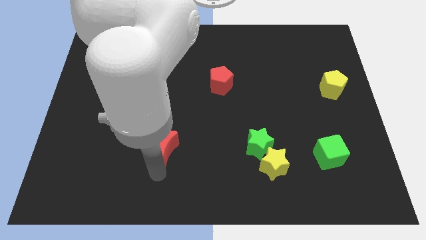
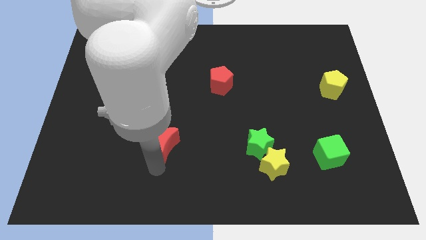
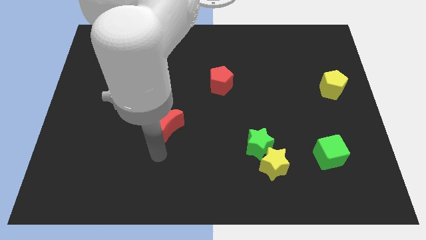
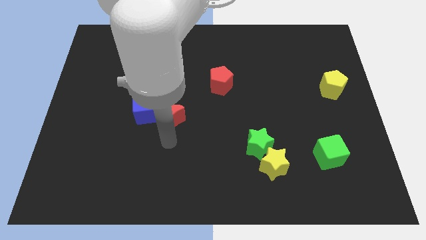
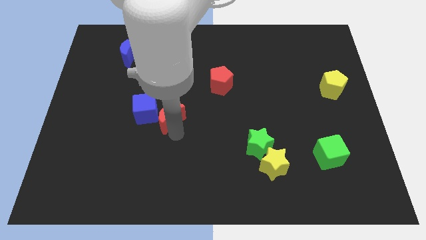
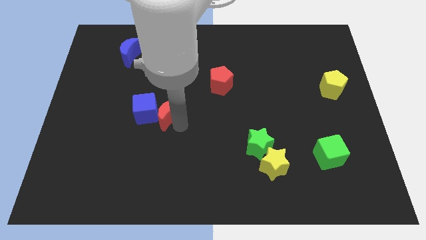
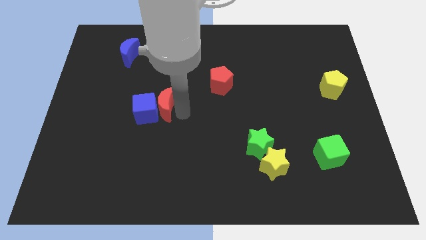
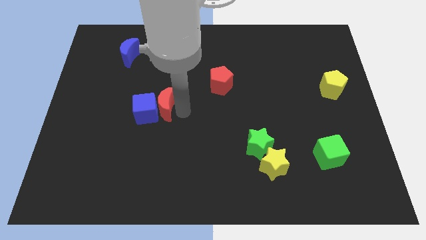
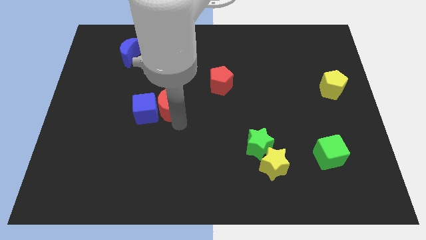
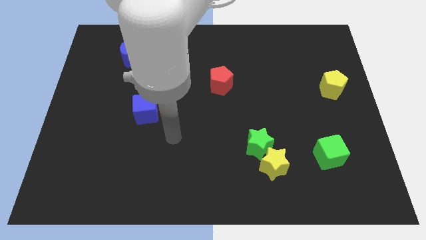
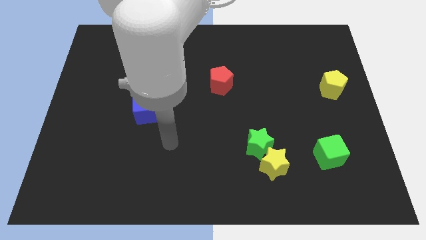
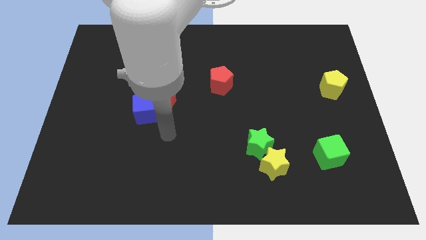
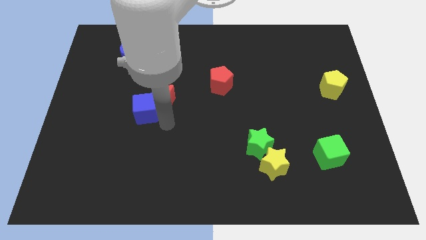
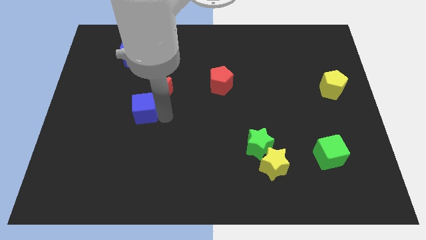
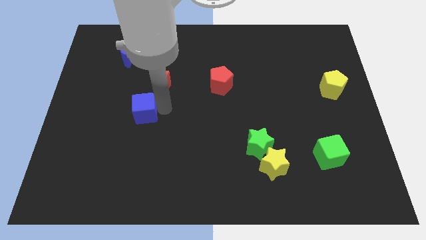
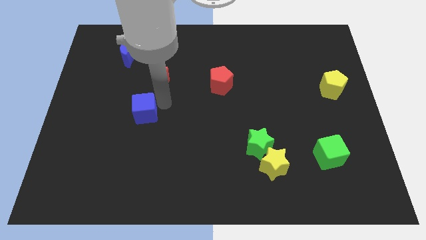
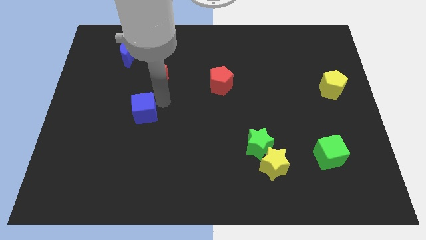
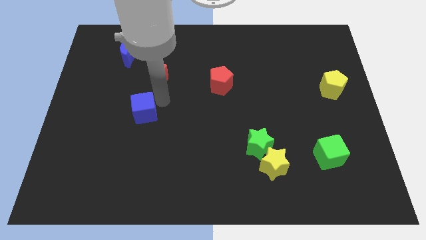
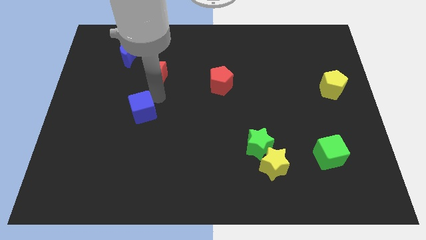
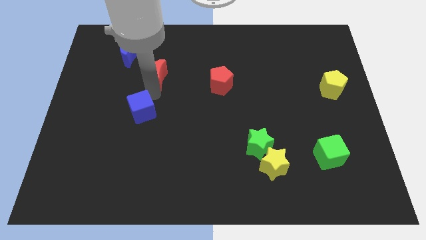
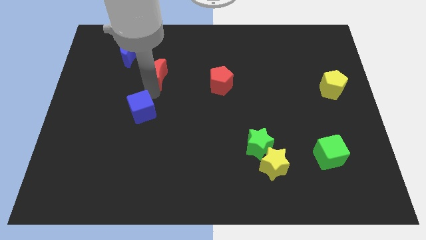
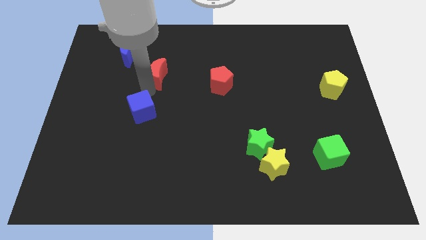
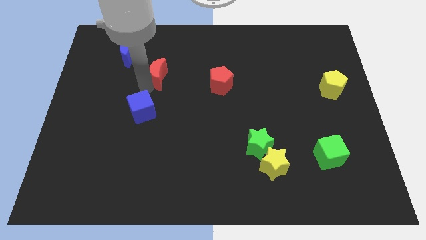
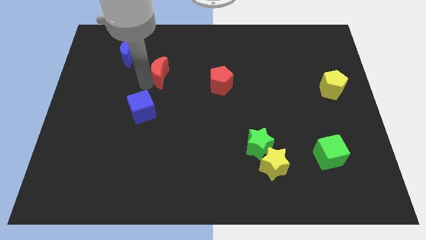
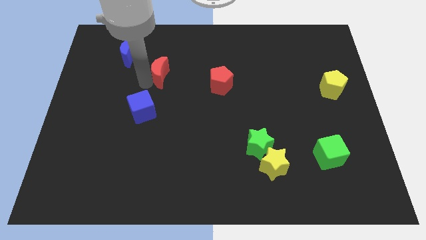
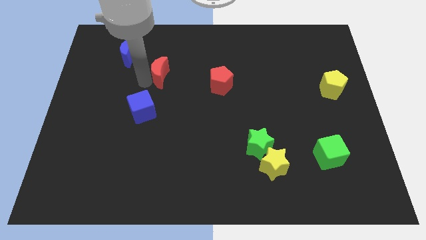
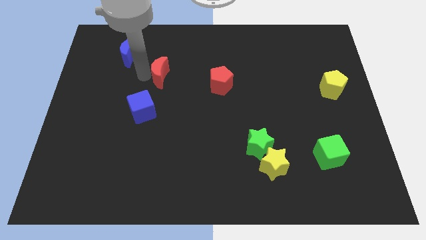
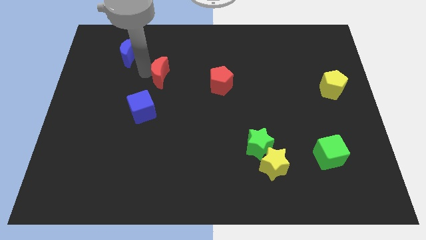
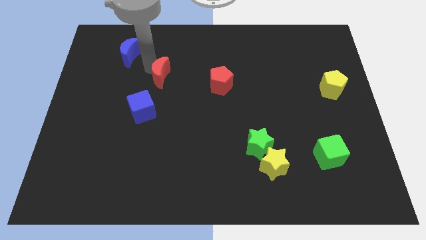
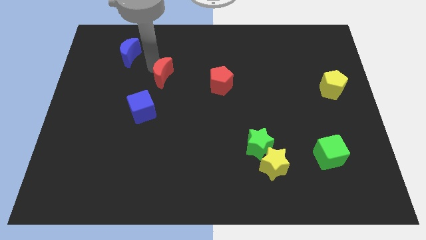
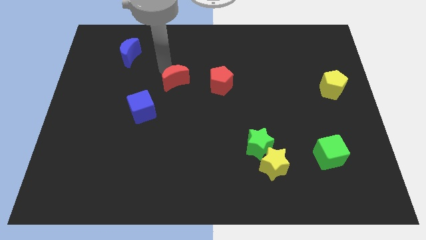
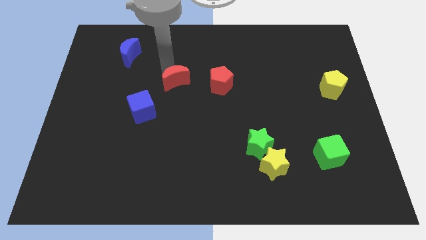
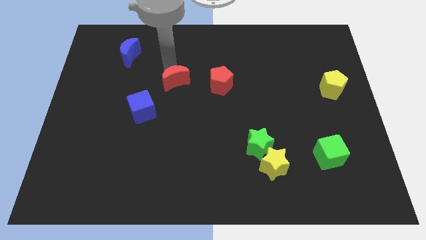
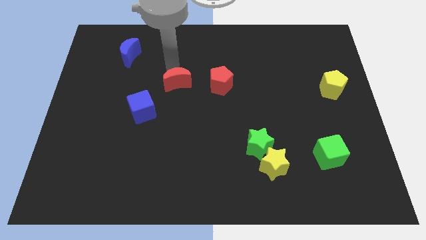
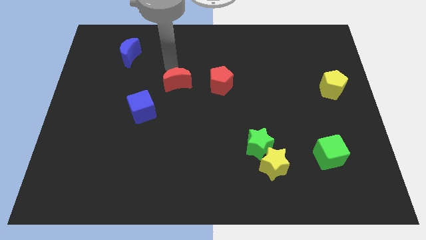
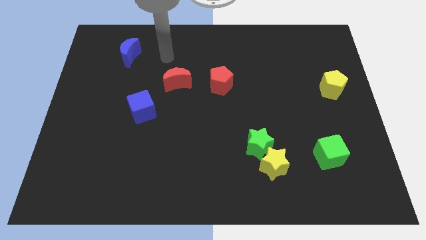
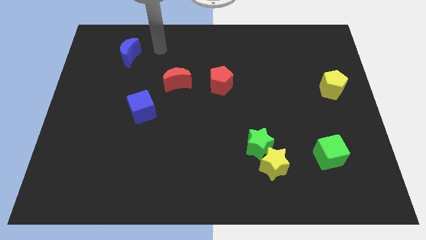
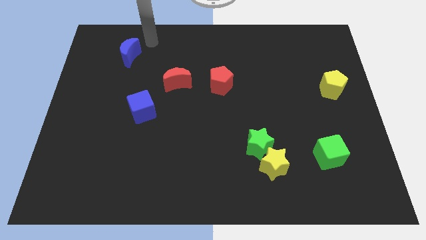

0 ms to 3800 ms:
push the red crescent to the left side of the red pentagon

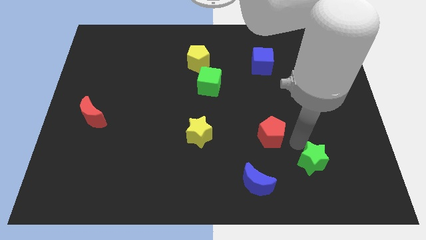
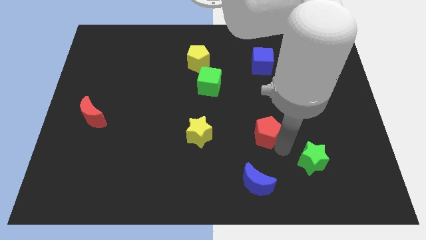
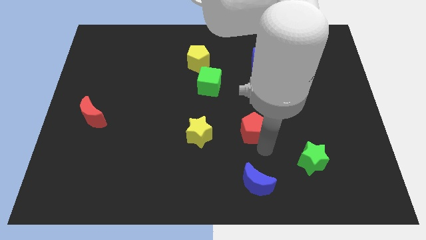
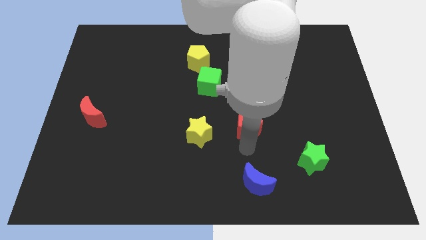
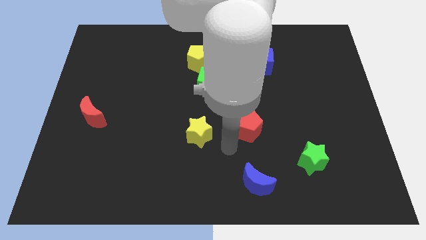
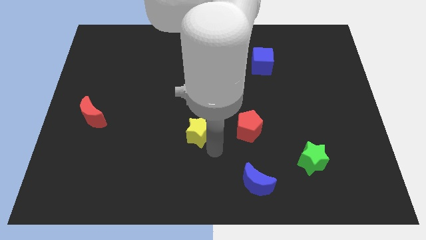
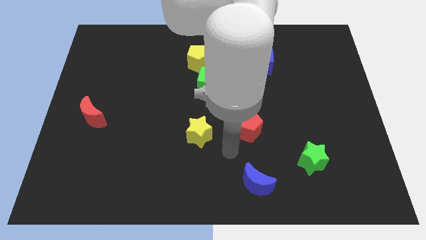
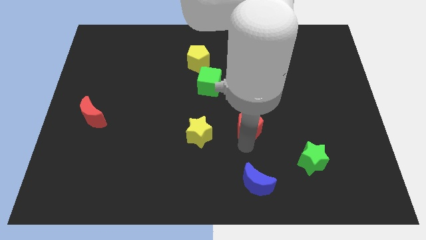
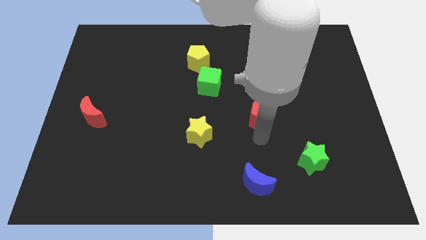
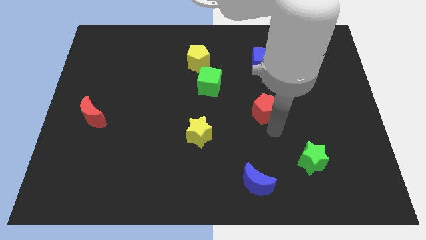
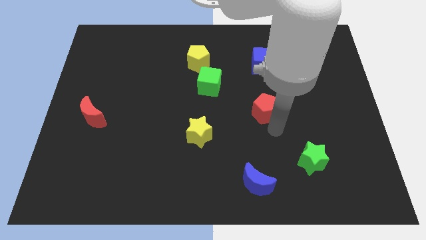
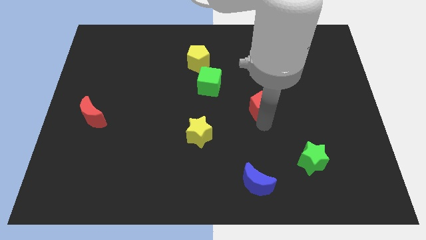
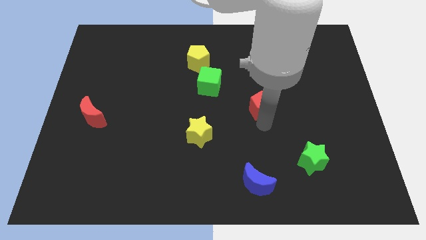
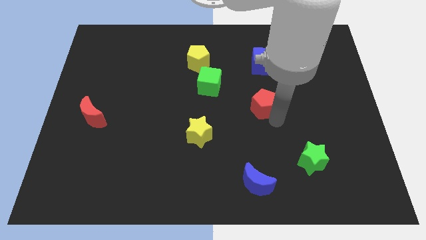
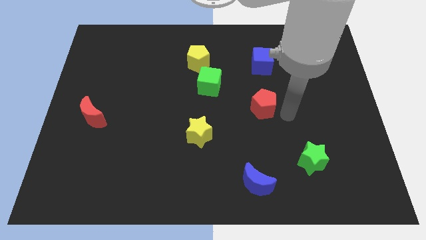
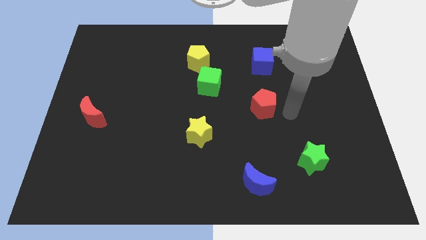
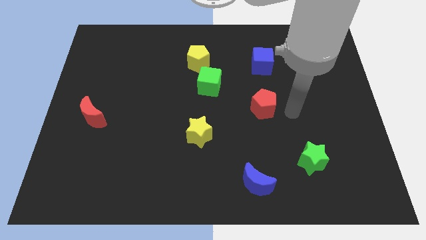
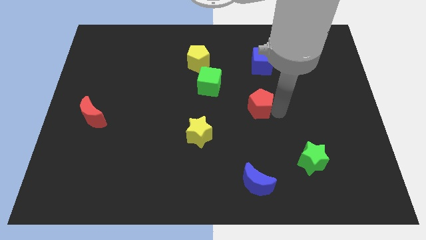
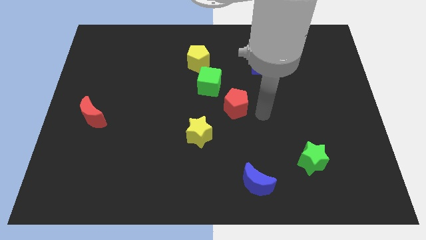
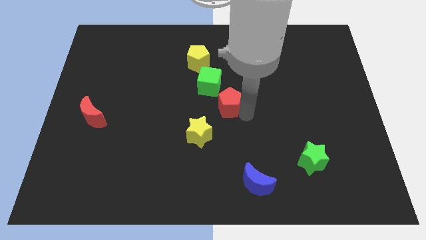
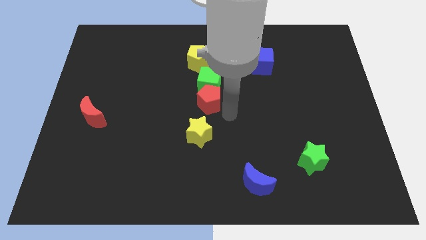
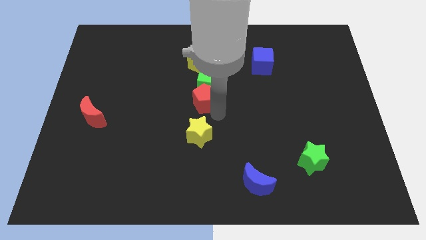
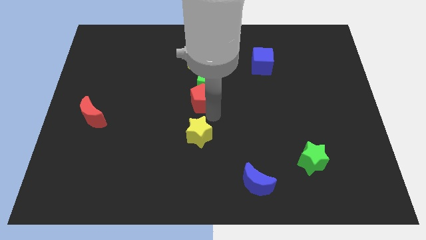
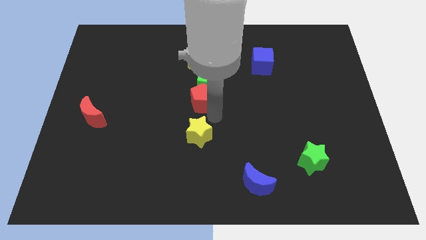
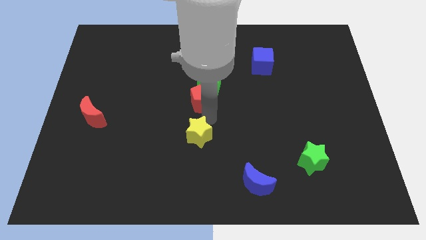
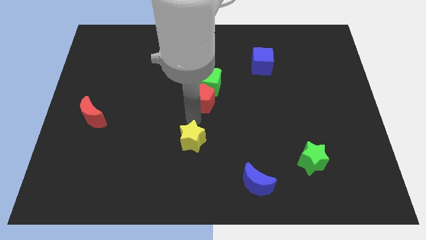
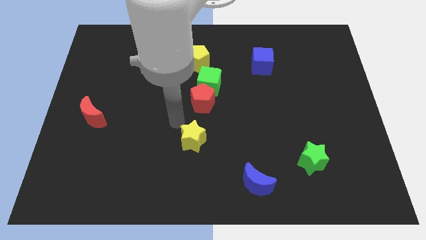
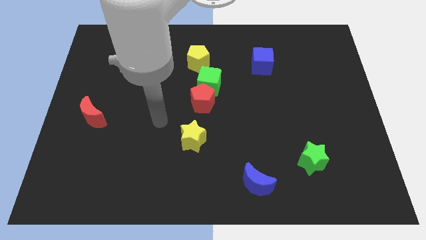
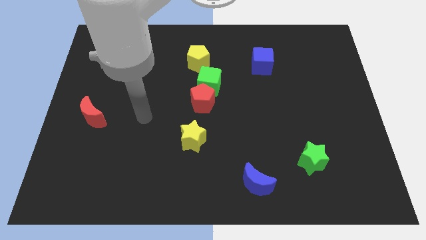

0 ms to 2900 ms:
push the red pentagon below the green cube

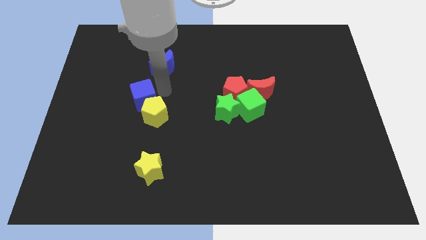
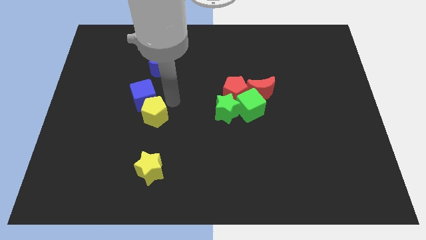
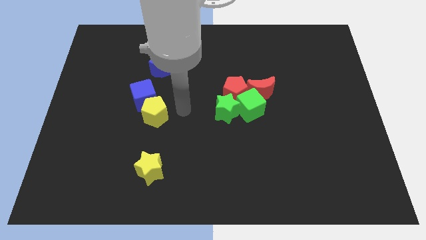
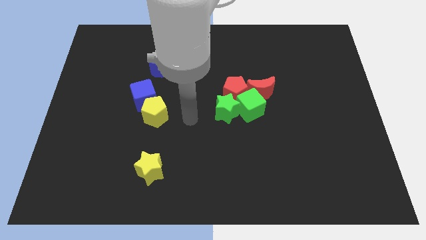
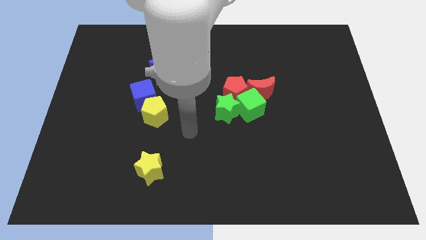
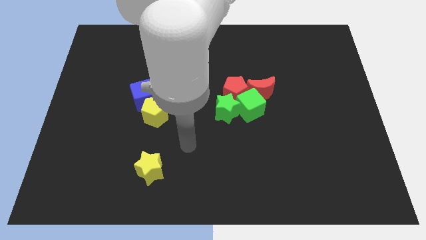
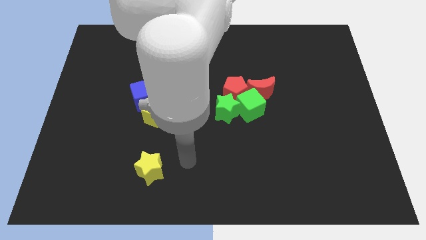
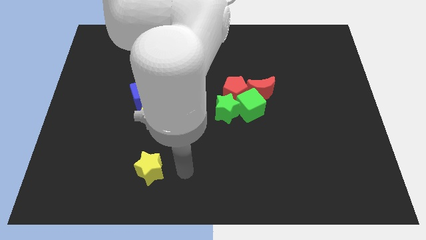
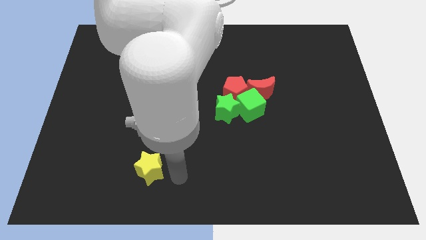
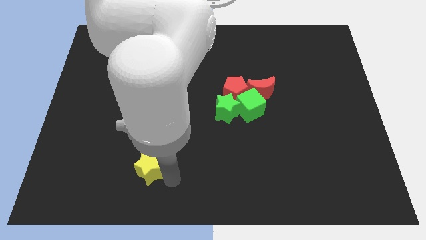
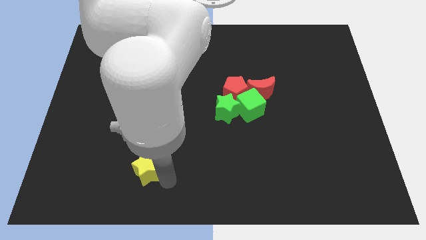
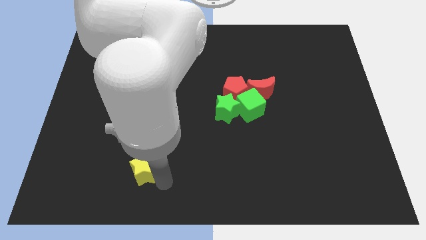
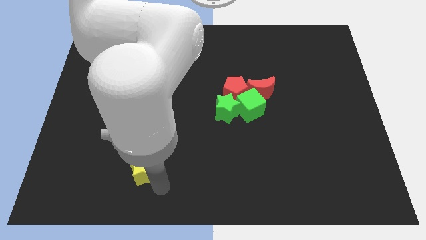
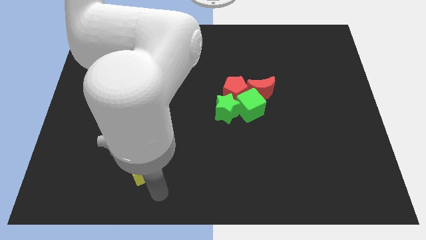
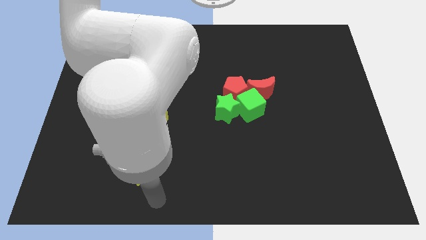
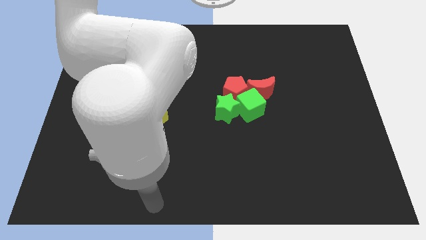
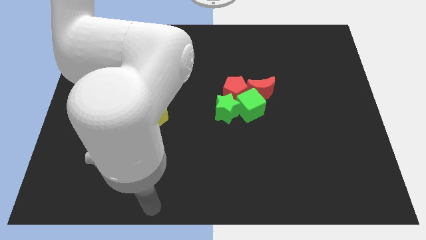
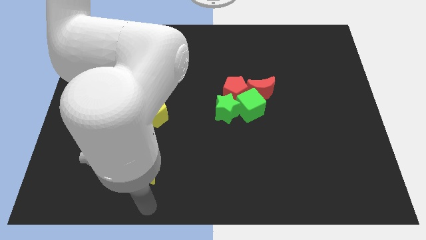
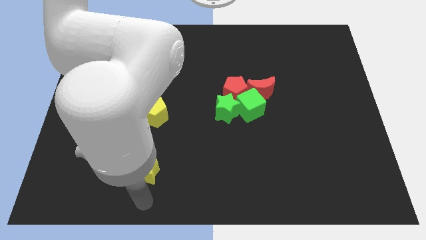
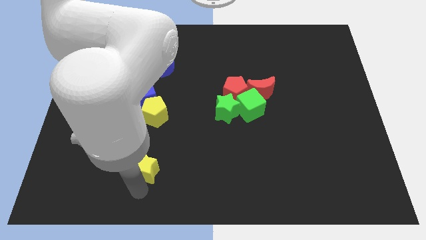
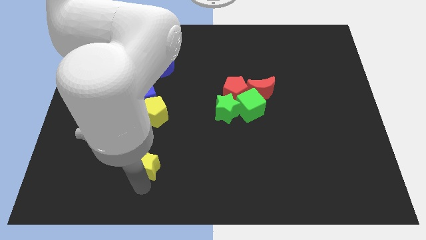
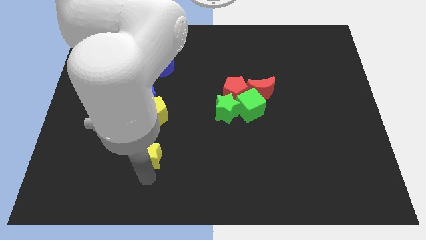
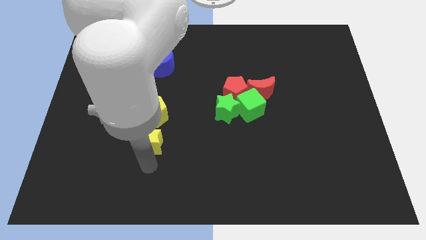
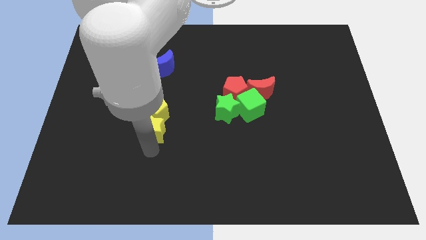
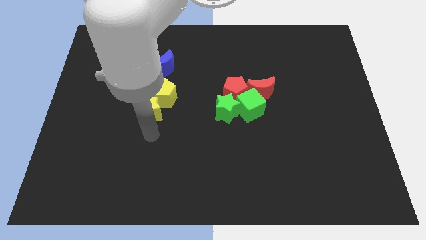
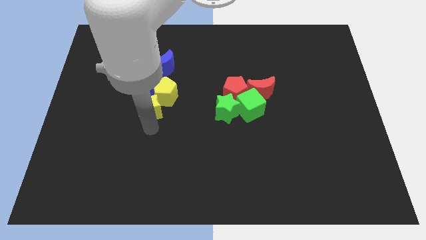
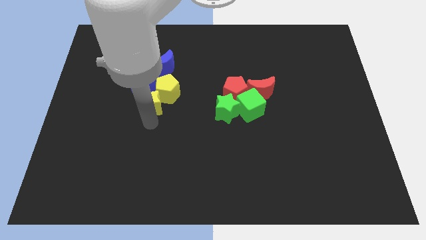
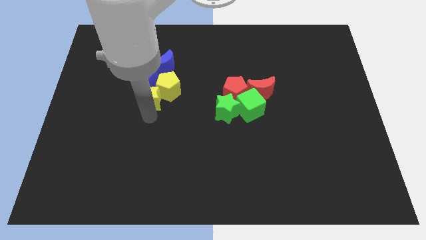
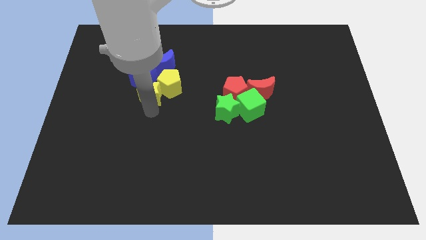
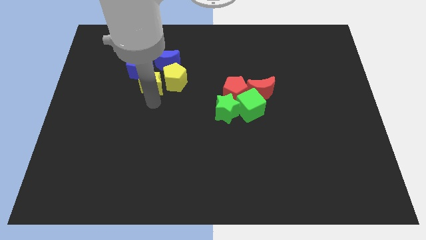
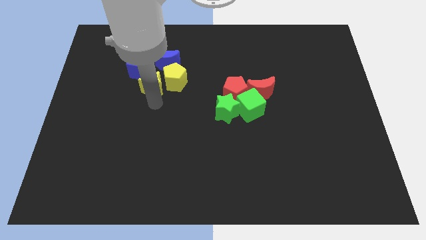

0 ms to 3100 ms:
push the yellow star into the yellow pentagon
